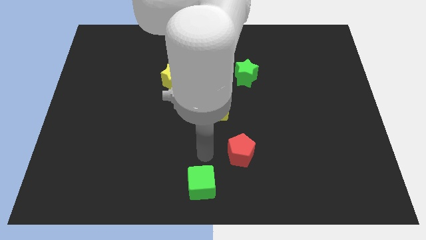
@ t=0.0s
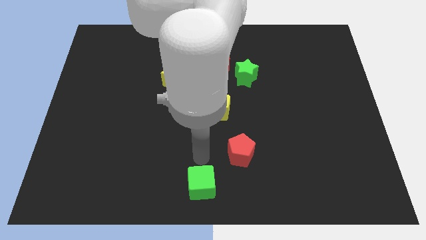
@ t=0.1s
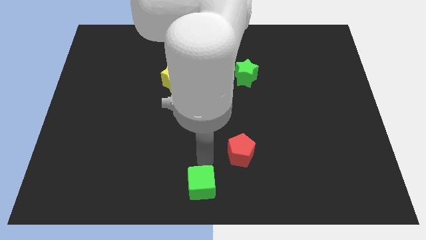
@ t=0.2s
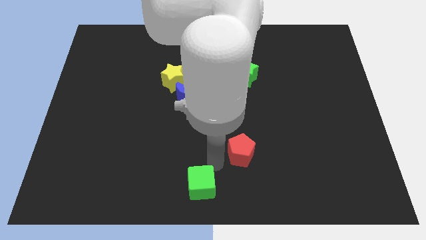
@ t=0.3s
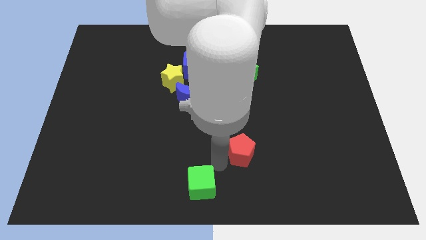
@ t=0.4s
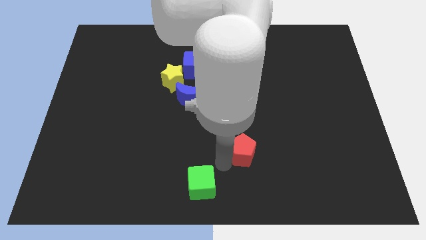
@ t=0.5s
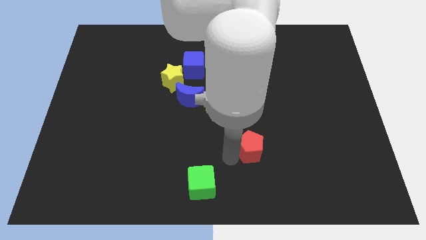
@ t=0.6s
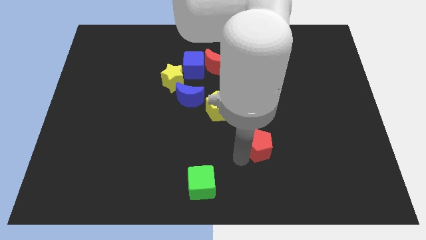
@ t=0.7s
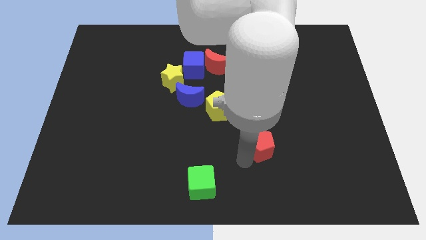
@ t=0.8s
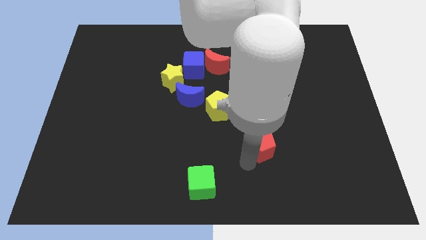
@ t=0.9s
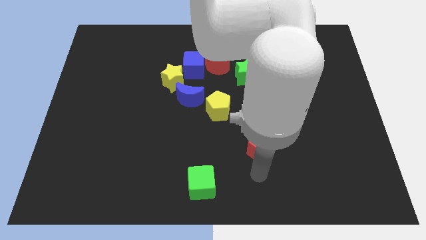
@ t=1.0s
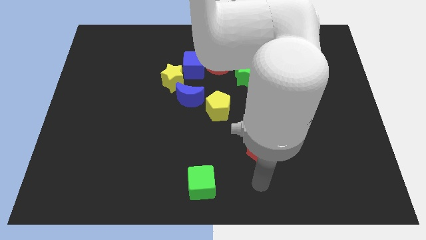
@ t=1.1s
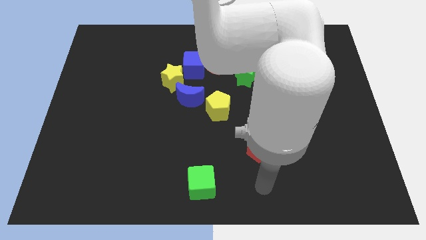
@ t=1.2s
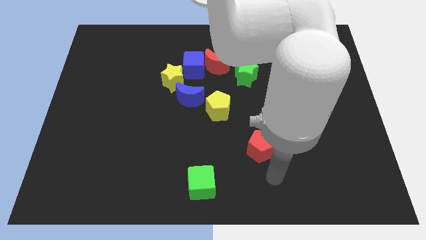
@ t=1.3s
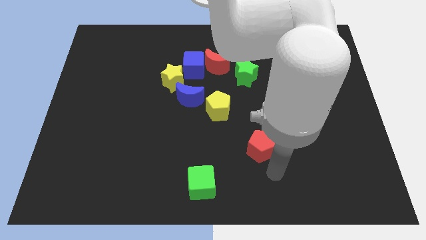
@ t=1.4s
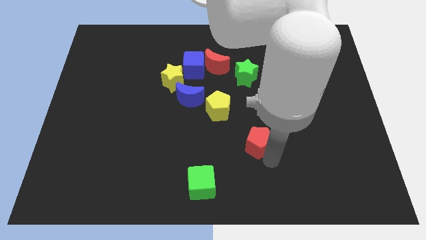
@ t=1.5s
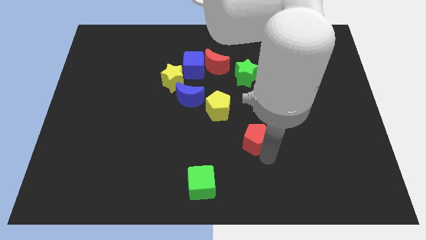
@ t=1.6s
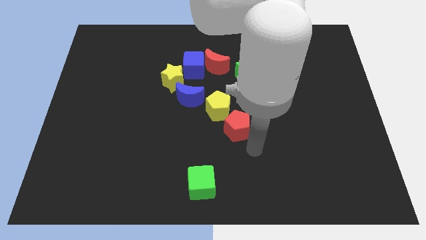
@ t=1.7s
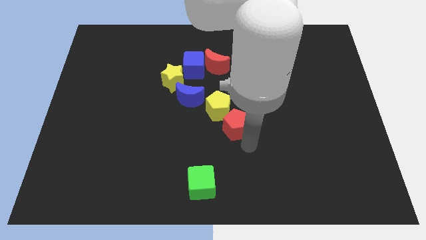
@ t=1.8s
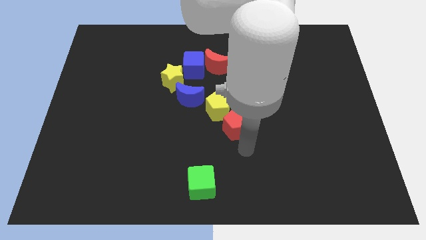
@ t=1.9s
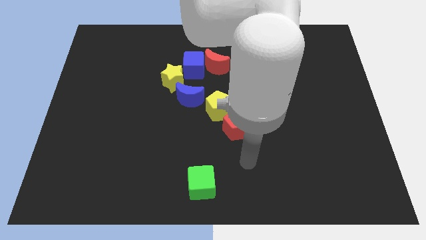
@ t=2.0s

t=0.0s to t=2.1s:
move the red pentagon towards the bottom of the yellow pentagon

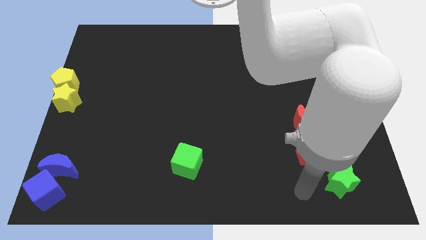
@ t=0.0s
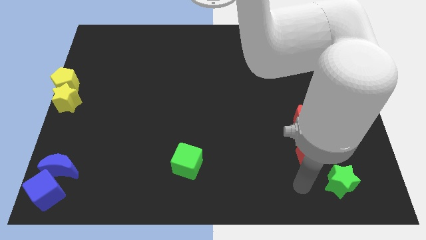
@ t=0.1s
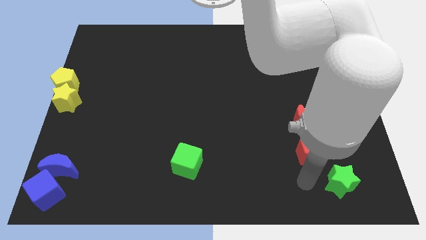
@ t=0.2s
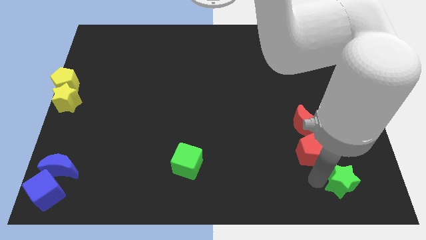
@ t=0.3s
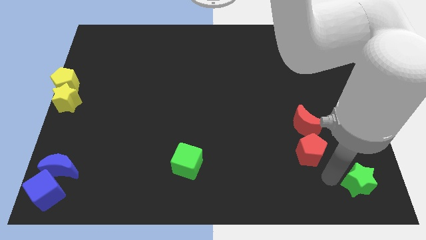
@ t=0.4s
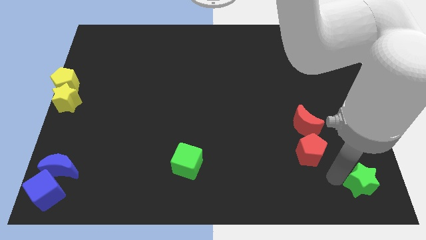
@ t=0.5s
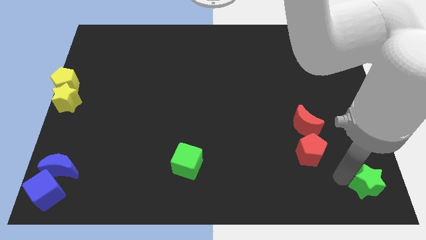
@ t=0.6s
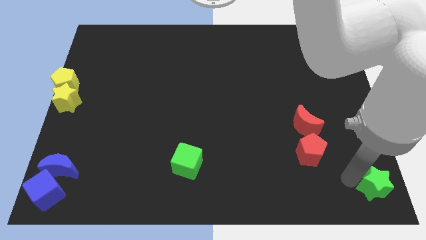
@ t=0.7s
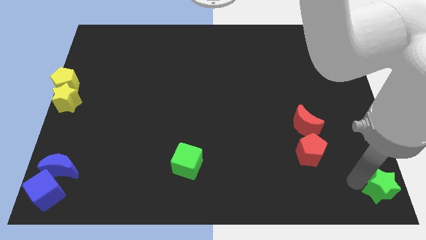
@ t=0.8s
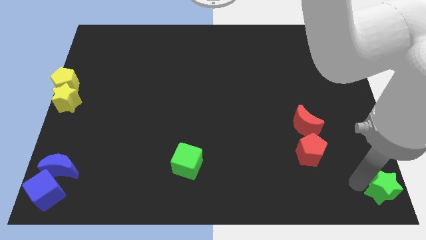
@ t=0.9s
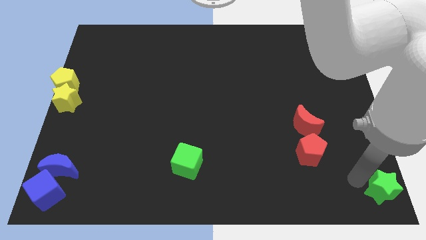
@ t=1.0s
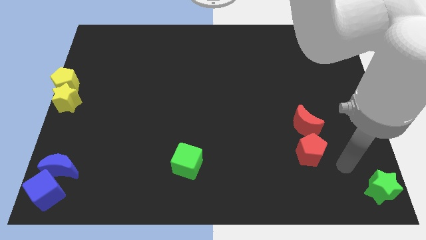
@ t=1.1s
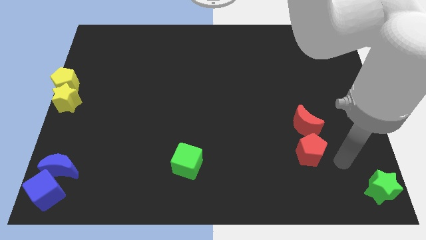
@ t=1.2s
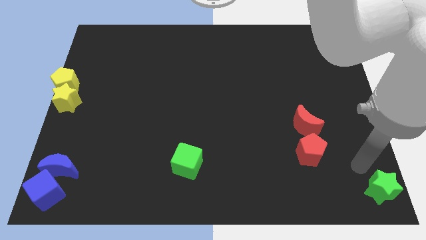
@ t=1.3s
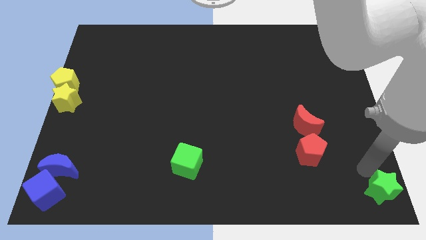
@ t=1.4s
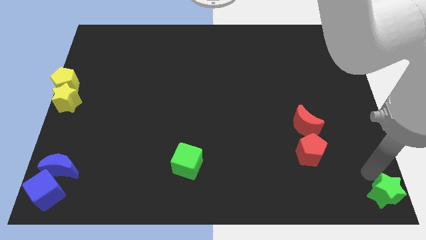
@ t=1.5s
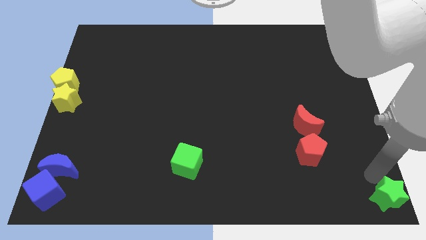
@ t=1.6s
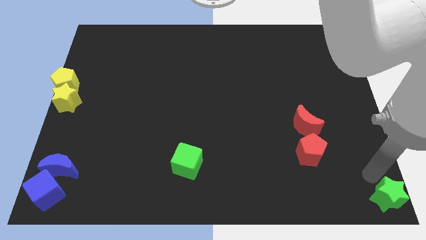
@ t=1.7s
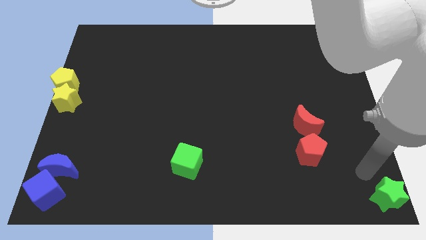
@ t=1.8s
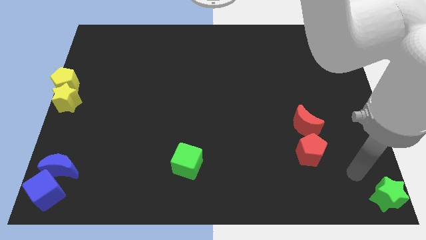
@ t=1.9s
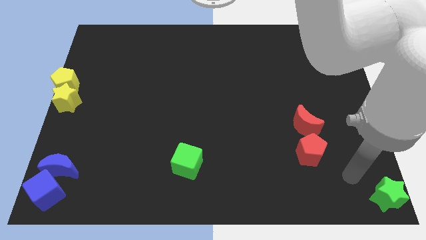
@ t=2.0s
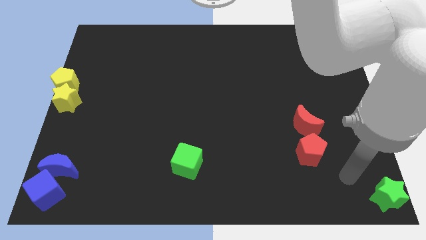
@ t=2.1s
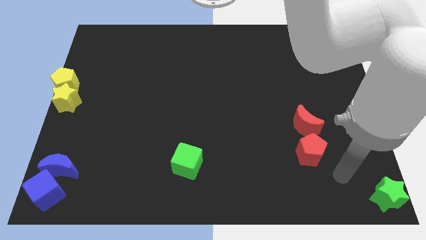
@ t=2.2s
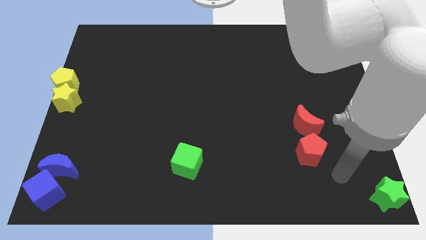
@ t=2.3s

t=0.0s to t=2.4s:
place the green star towards the bottom right corner of the board

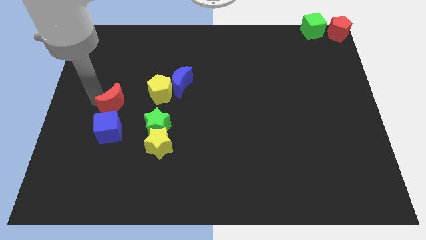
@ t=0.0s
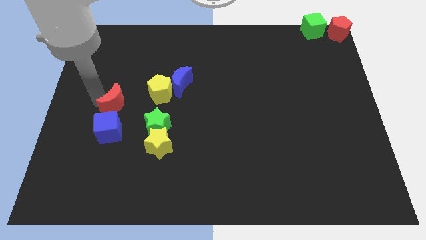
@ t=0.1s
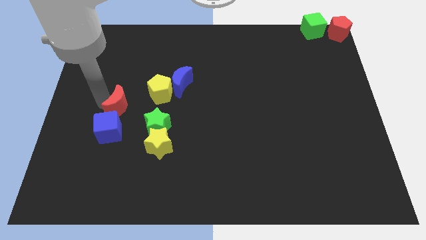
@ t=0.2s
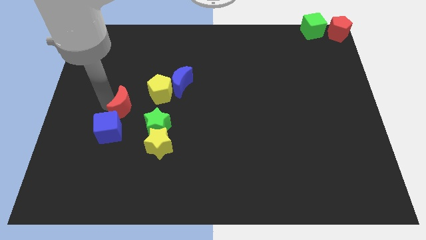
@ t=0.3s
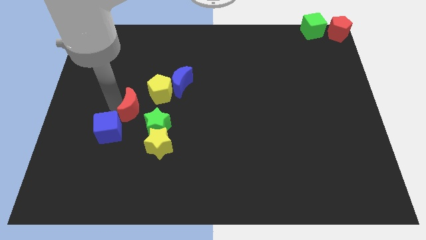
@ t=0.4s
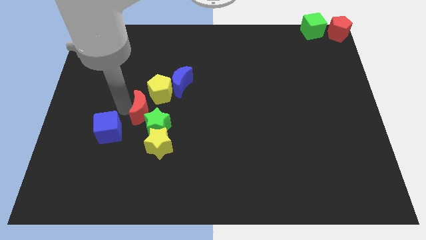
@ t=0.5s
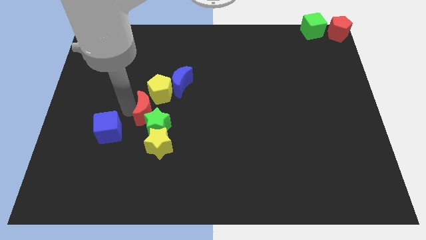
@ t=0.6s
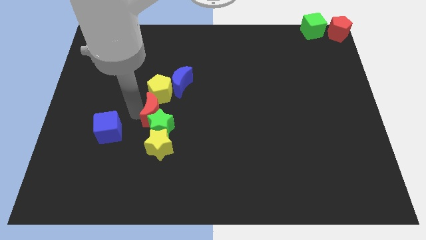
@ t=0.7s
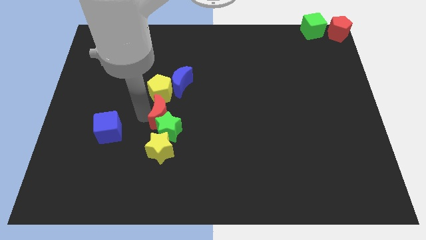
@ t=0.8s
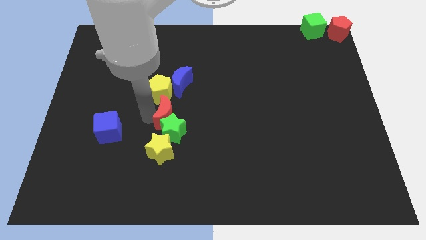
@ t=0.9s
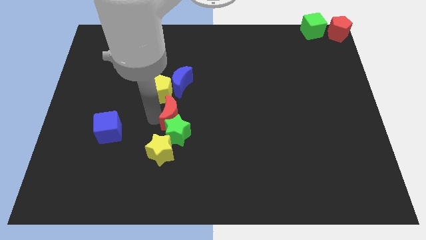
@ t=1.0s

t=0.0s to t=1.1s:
push the red crescent into the green star

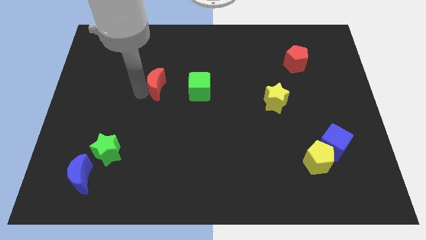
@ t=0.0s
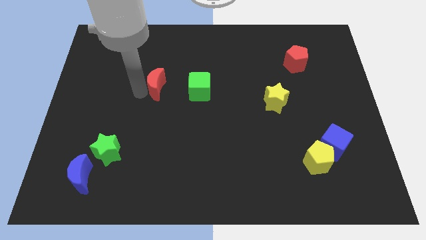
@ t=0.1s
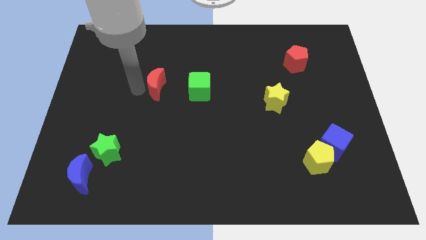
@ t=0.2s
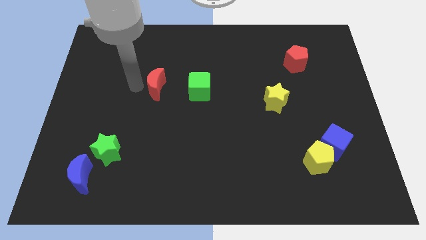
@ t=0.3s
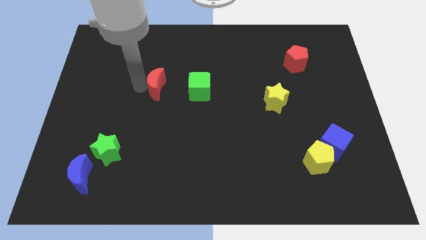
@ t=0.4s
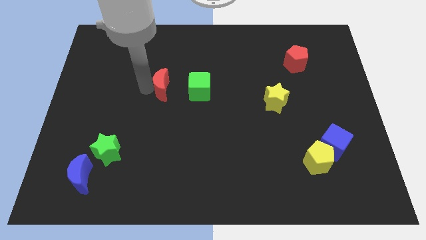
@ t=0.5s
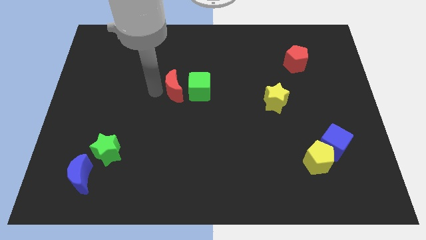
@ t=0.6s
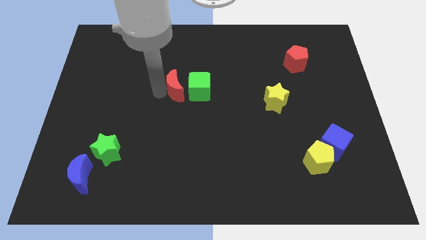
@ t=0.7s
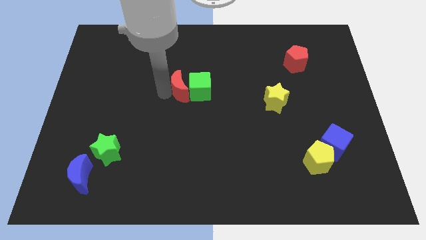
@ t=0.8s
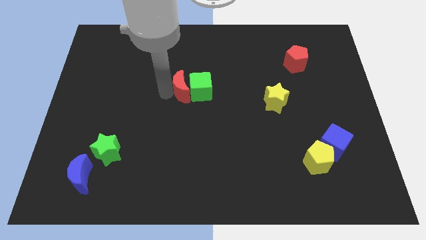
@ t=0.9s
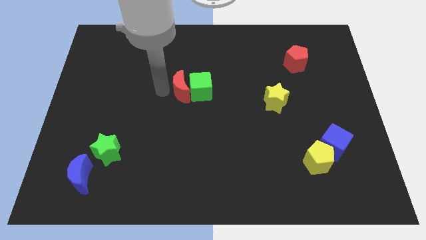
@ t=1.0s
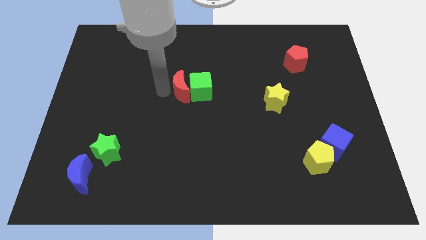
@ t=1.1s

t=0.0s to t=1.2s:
move the red moon close to green cube

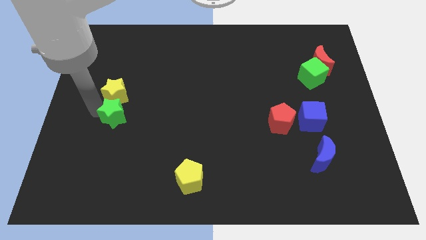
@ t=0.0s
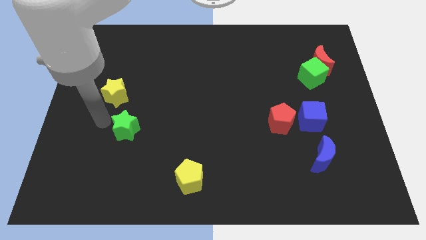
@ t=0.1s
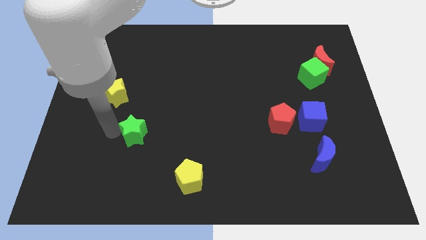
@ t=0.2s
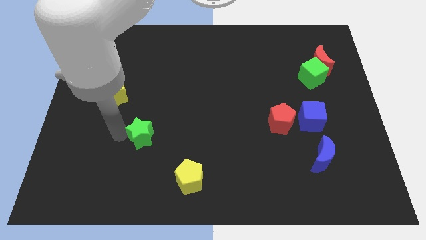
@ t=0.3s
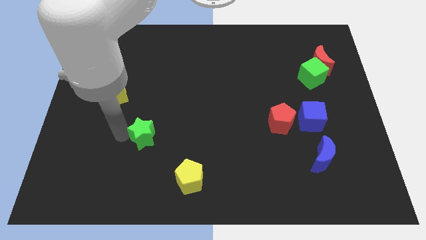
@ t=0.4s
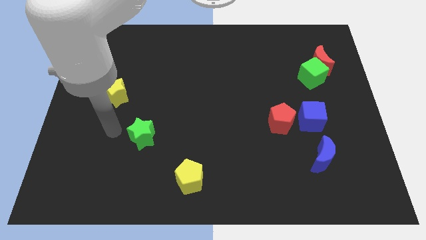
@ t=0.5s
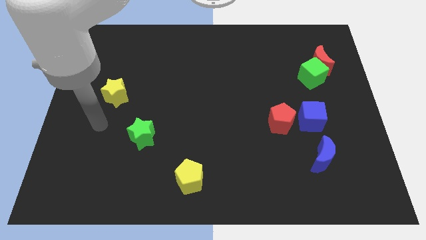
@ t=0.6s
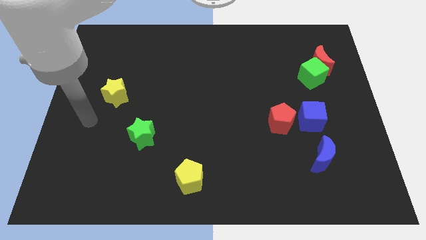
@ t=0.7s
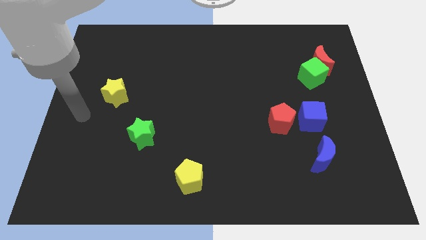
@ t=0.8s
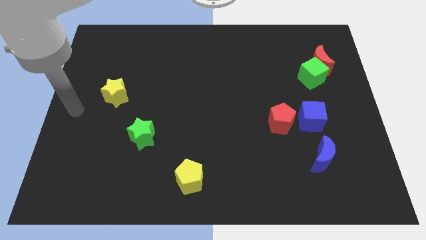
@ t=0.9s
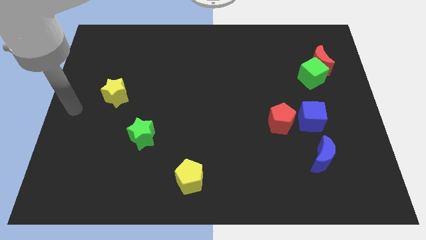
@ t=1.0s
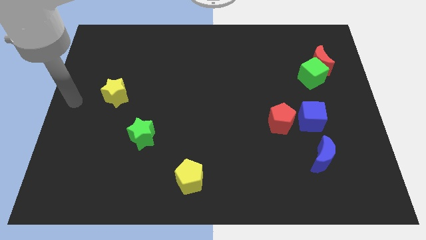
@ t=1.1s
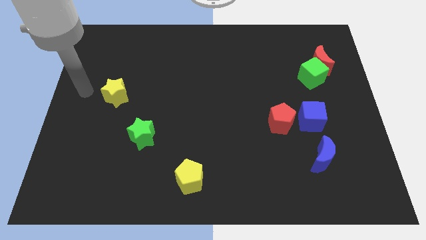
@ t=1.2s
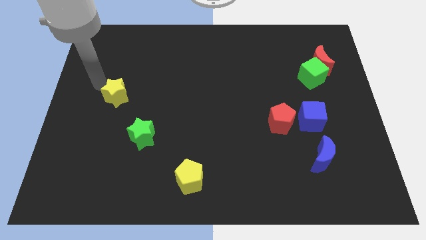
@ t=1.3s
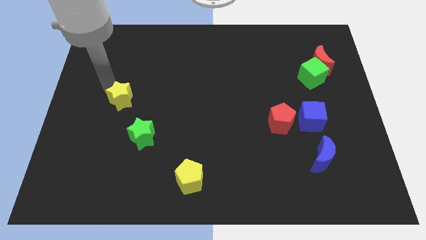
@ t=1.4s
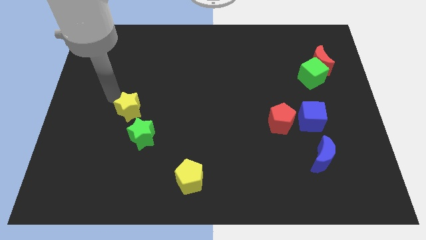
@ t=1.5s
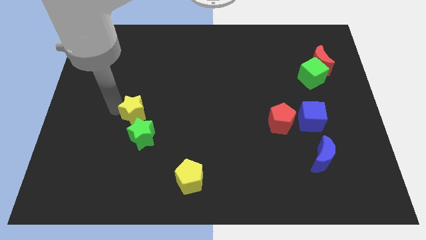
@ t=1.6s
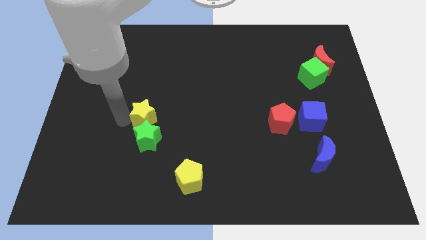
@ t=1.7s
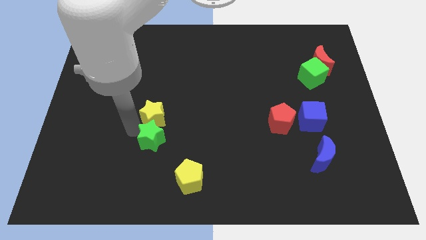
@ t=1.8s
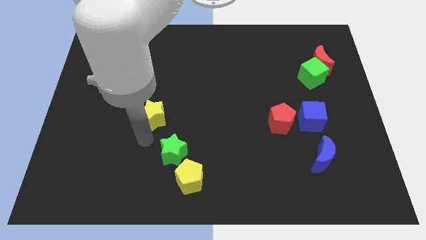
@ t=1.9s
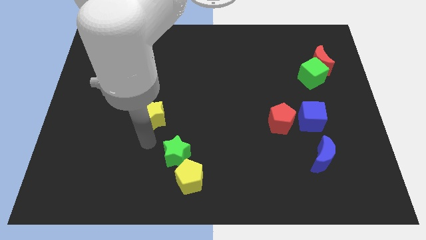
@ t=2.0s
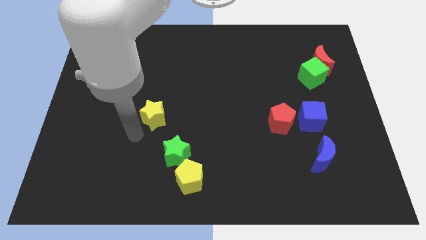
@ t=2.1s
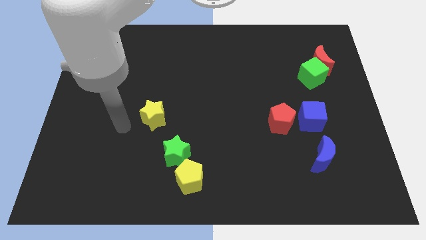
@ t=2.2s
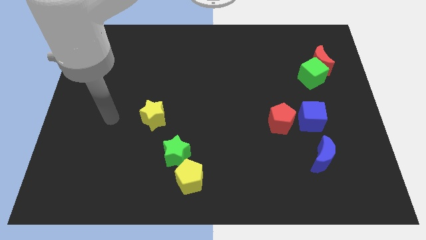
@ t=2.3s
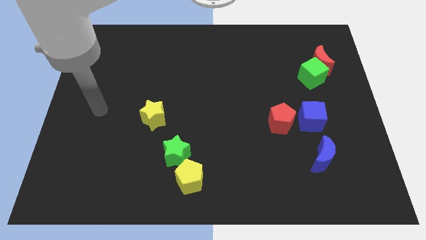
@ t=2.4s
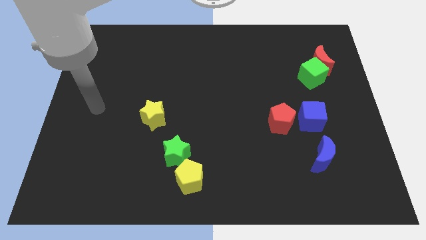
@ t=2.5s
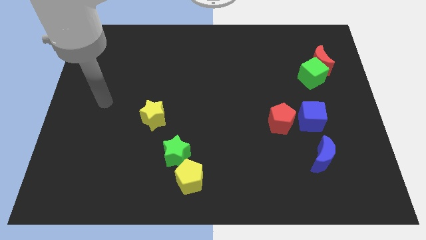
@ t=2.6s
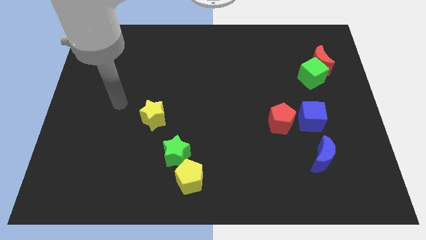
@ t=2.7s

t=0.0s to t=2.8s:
place the green star diagonally in between the yellow star and the yellow pentagon
